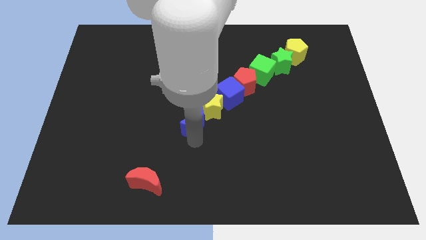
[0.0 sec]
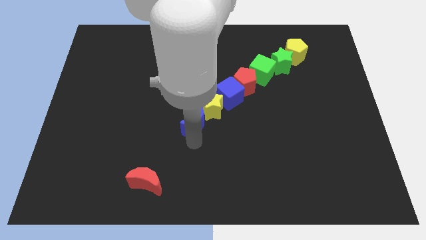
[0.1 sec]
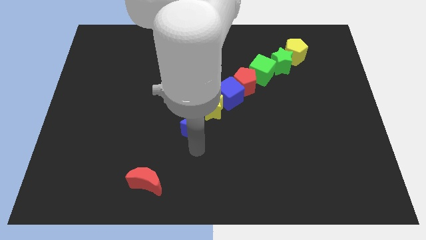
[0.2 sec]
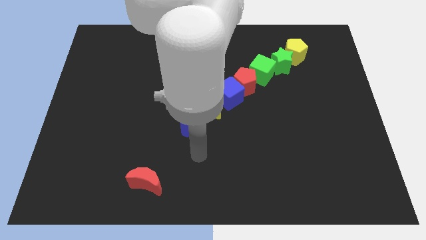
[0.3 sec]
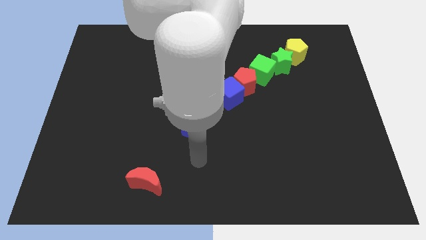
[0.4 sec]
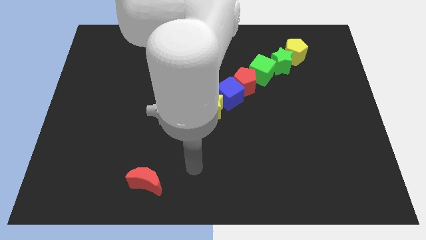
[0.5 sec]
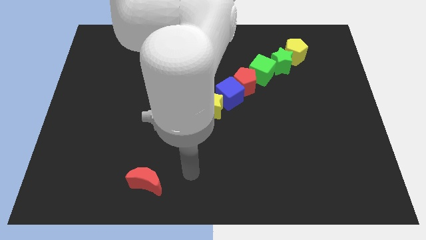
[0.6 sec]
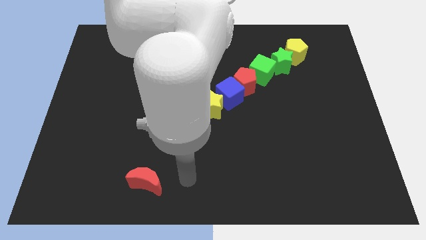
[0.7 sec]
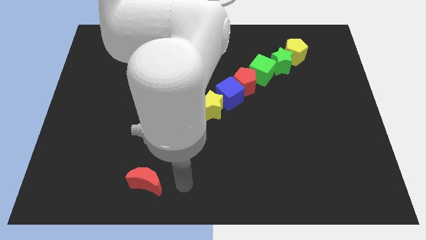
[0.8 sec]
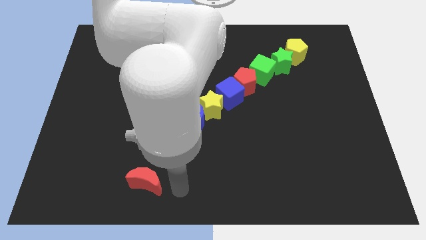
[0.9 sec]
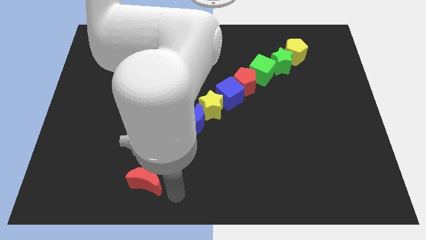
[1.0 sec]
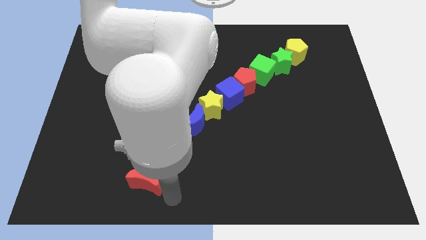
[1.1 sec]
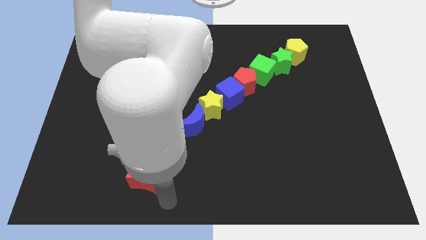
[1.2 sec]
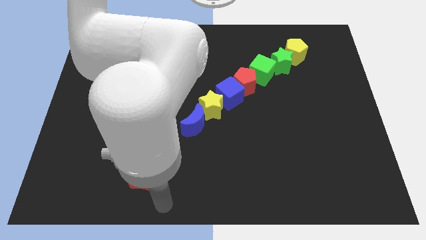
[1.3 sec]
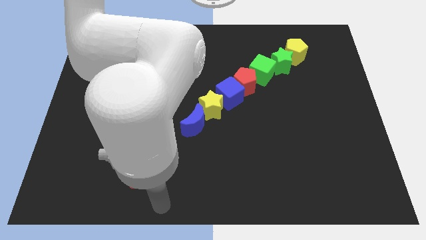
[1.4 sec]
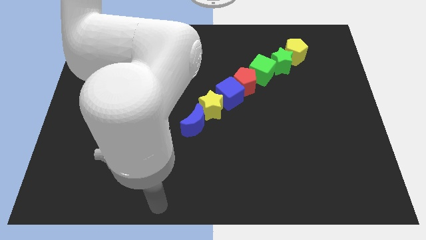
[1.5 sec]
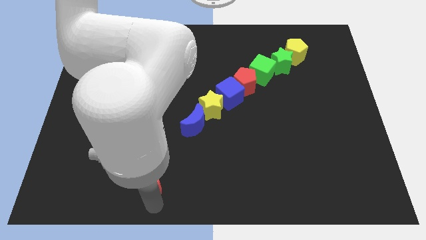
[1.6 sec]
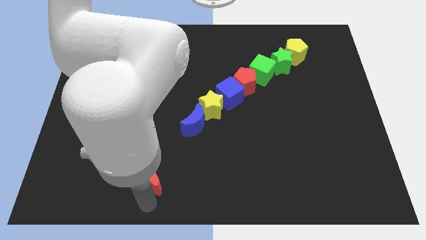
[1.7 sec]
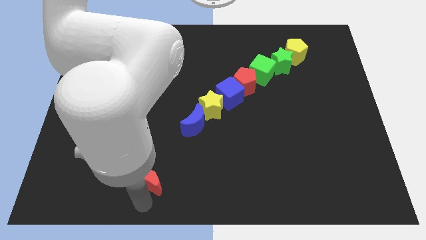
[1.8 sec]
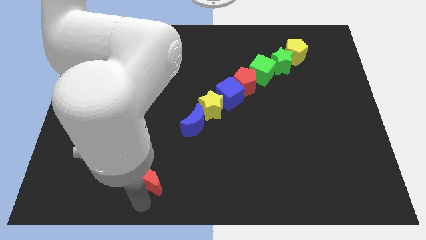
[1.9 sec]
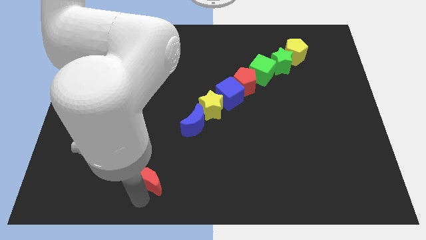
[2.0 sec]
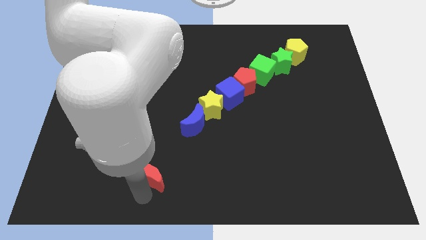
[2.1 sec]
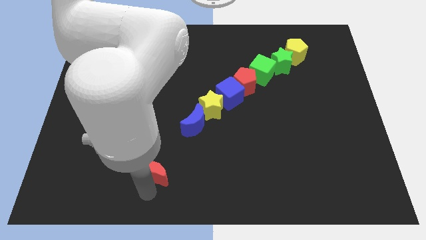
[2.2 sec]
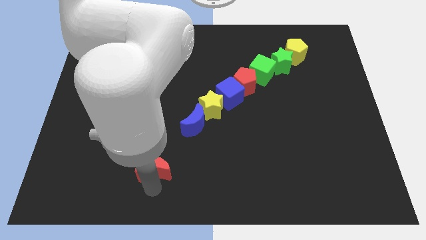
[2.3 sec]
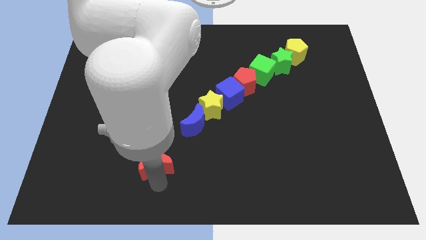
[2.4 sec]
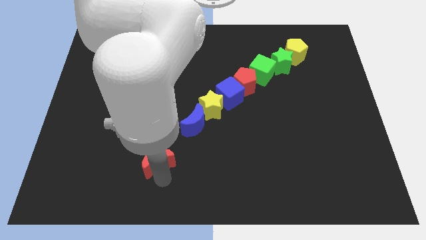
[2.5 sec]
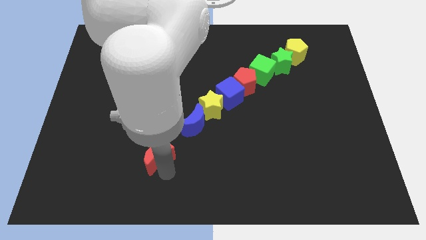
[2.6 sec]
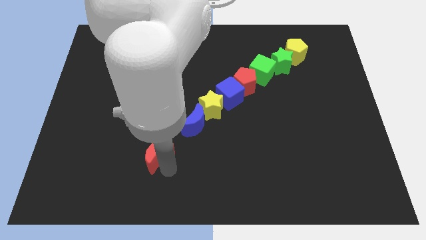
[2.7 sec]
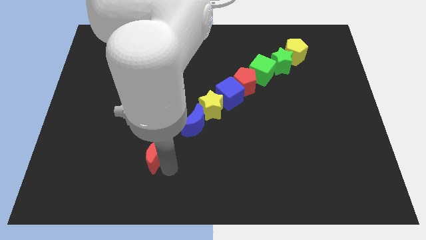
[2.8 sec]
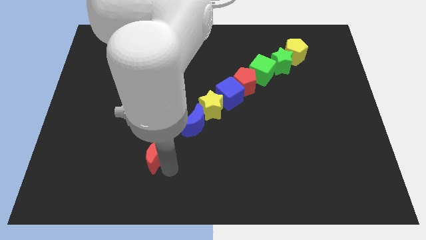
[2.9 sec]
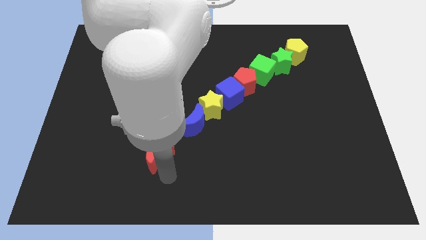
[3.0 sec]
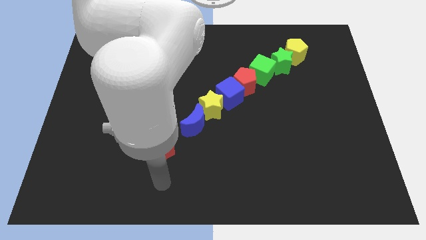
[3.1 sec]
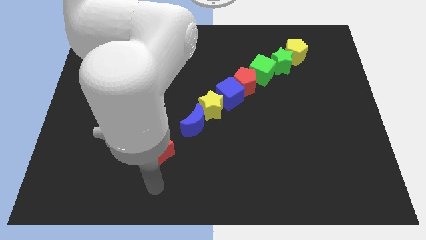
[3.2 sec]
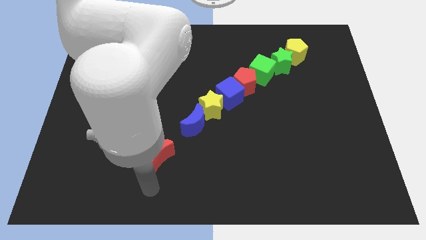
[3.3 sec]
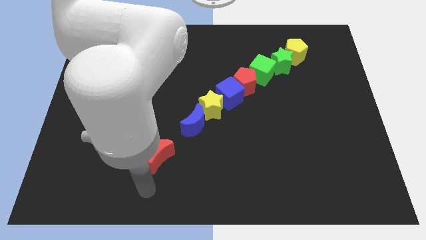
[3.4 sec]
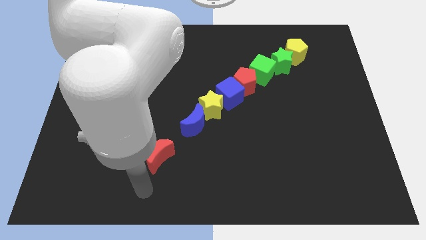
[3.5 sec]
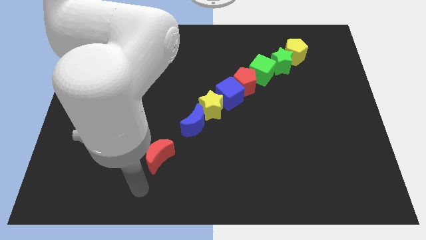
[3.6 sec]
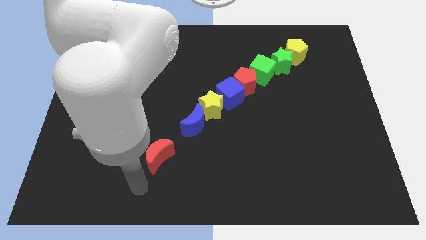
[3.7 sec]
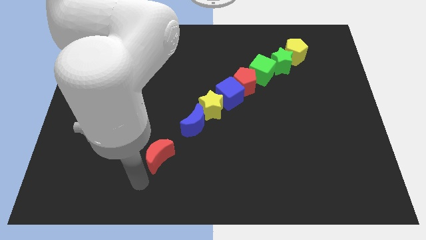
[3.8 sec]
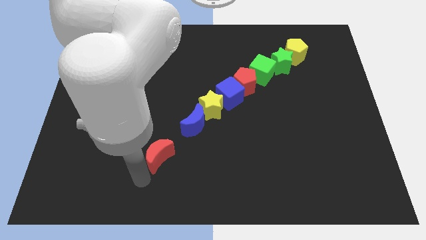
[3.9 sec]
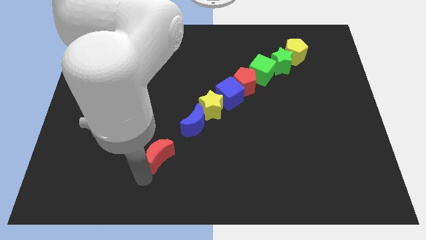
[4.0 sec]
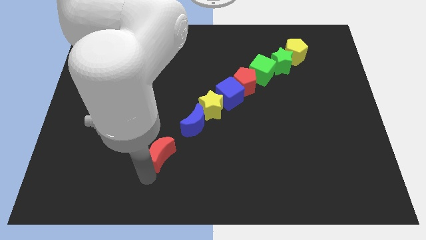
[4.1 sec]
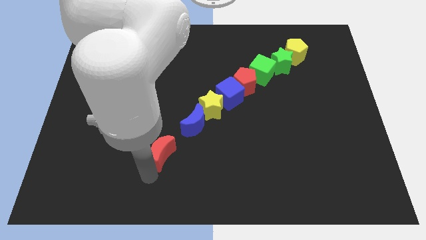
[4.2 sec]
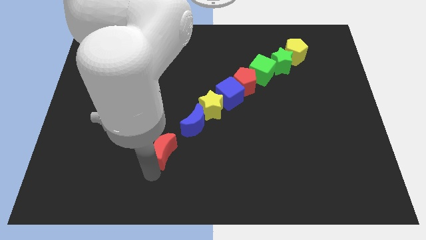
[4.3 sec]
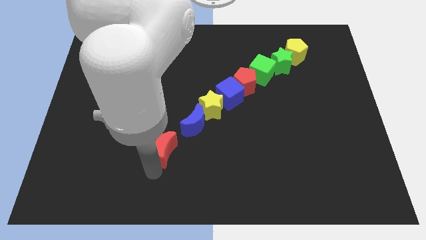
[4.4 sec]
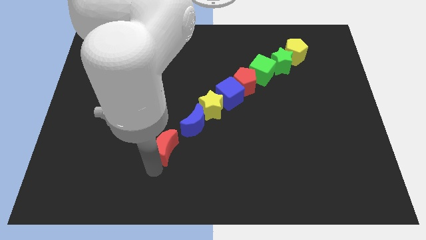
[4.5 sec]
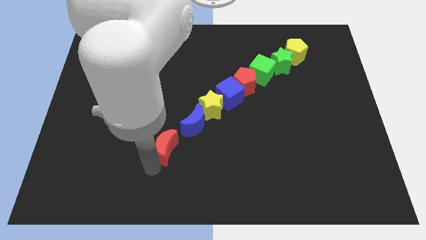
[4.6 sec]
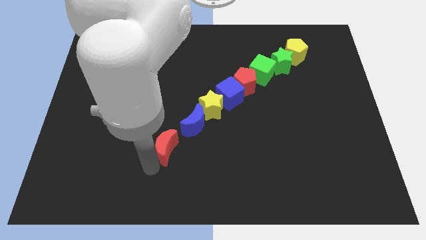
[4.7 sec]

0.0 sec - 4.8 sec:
push the red moon closer to the blue moon

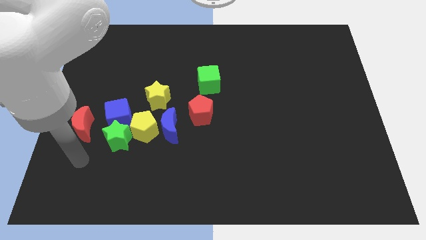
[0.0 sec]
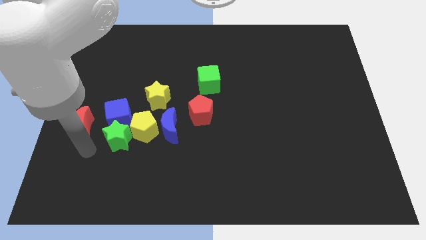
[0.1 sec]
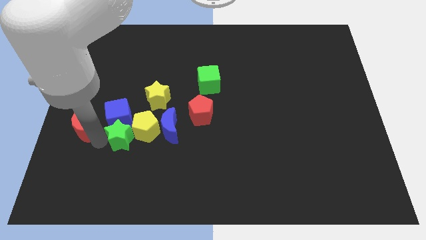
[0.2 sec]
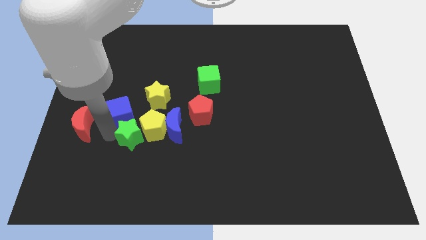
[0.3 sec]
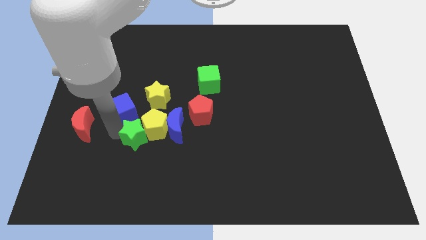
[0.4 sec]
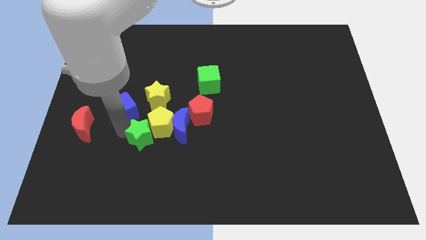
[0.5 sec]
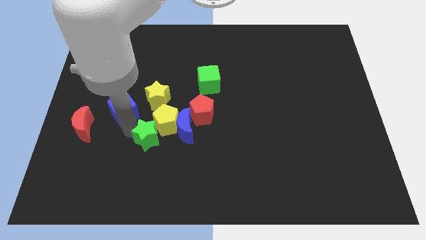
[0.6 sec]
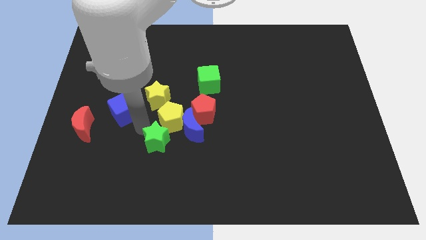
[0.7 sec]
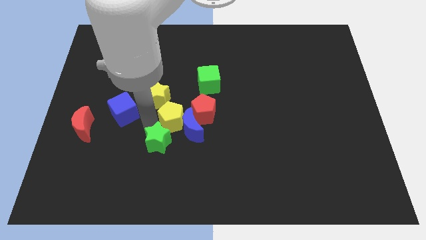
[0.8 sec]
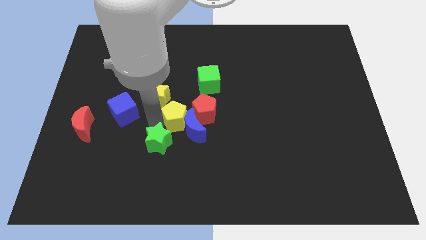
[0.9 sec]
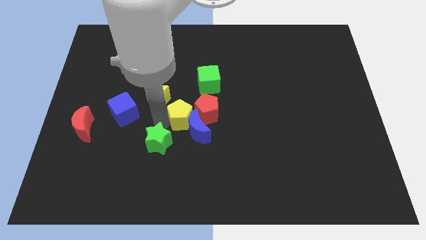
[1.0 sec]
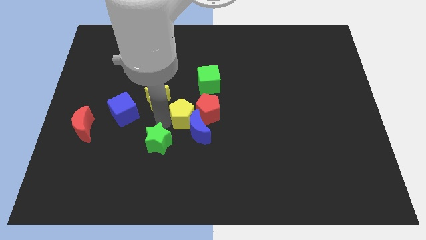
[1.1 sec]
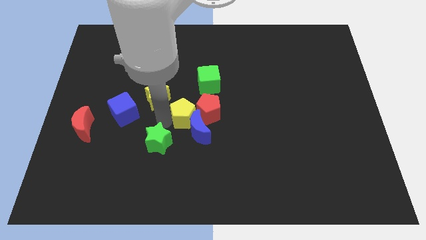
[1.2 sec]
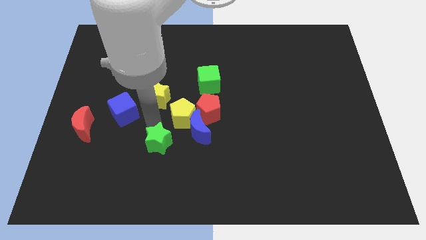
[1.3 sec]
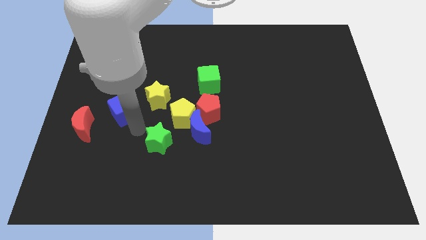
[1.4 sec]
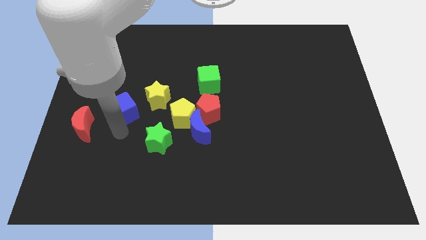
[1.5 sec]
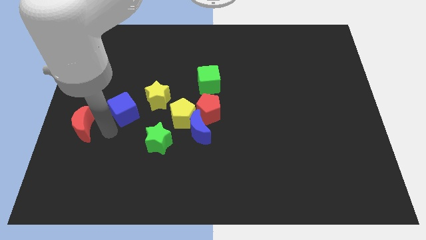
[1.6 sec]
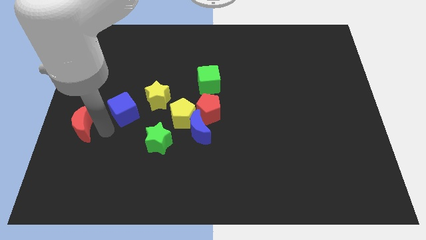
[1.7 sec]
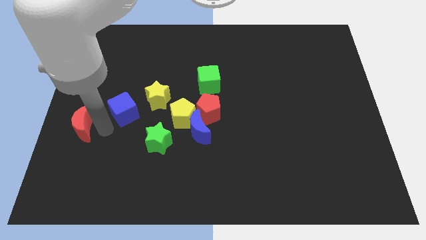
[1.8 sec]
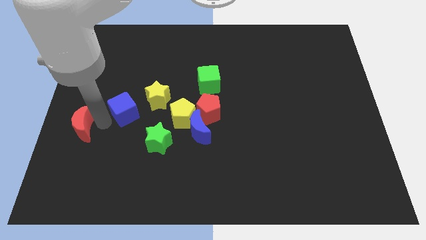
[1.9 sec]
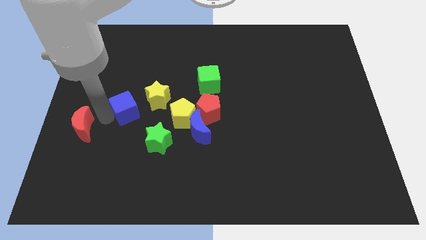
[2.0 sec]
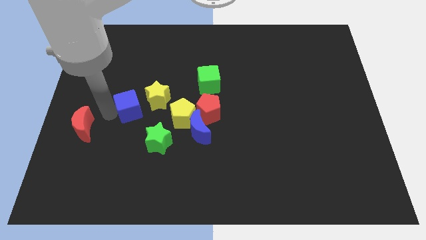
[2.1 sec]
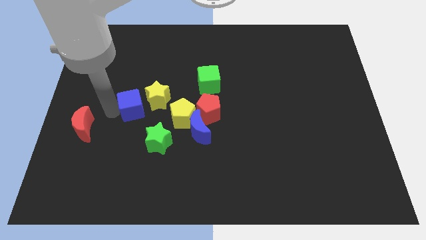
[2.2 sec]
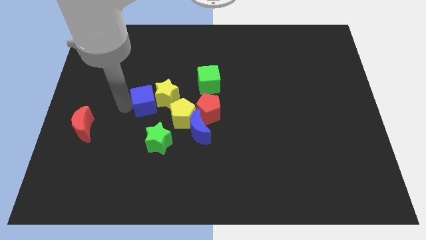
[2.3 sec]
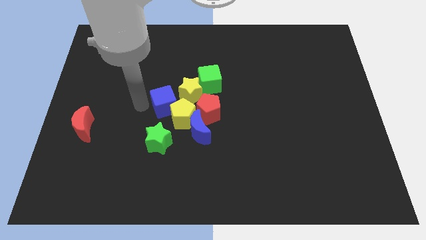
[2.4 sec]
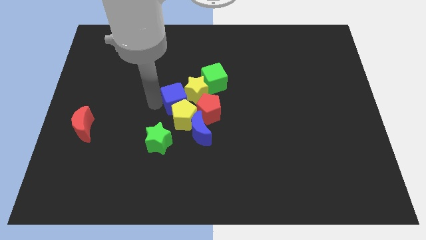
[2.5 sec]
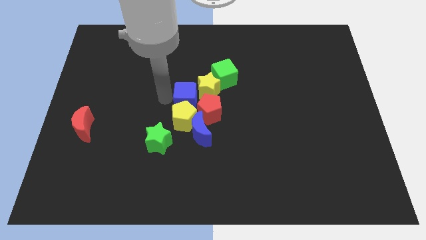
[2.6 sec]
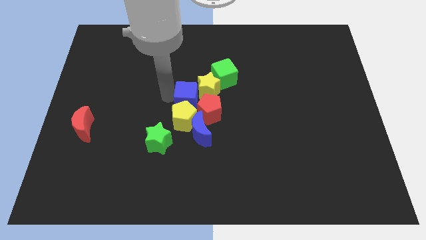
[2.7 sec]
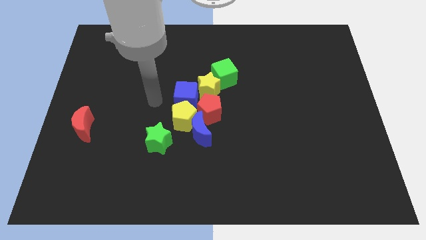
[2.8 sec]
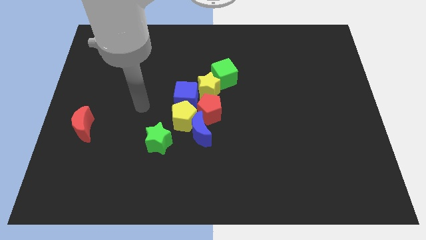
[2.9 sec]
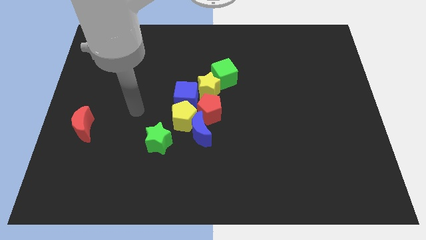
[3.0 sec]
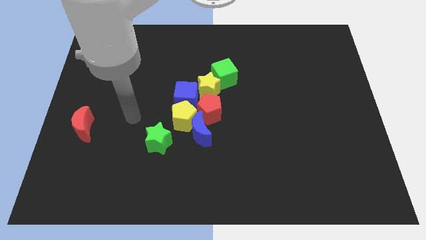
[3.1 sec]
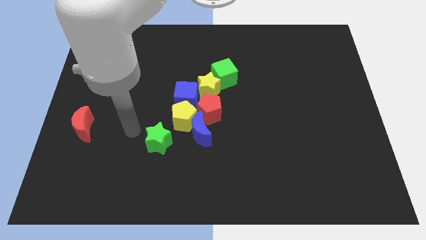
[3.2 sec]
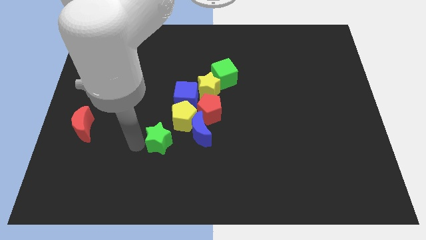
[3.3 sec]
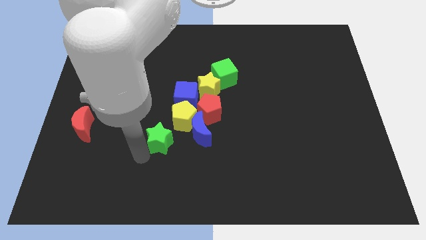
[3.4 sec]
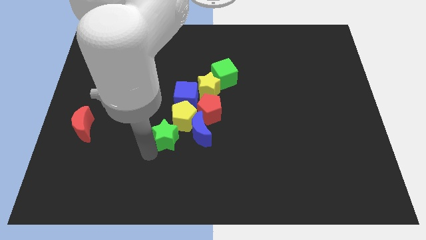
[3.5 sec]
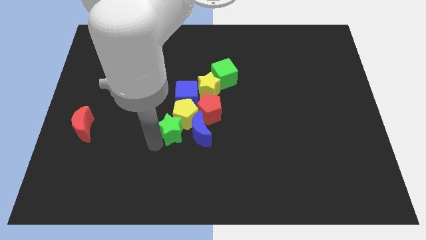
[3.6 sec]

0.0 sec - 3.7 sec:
push the group of blocks towards the center of the board

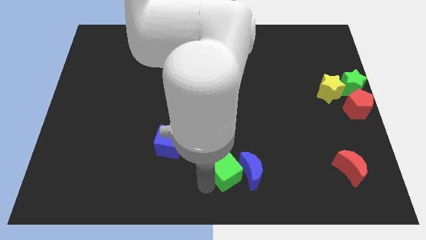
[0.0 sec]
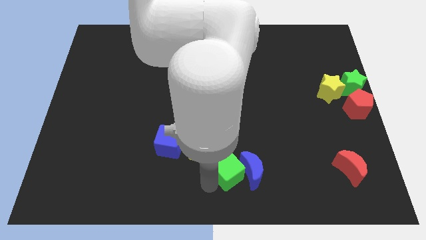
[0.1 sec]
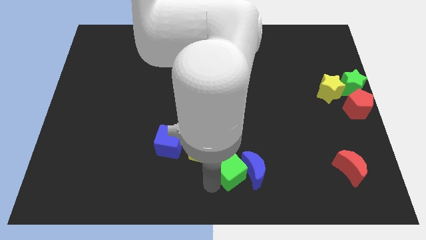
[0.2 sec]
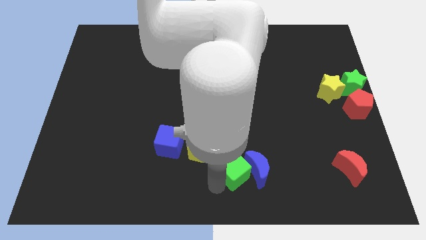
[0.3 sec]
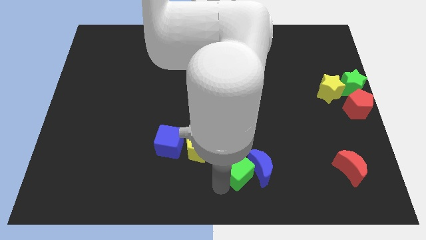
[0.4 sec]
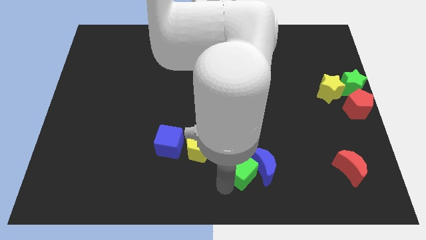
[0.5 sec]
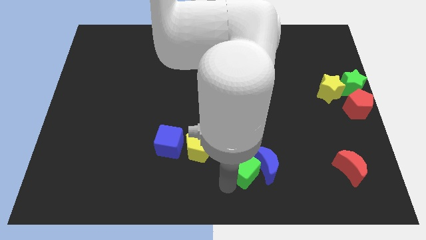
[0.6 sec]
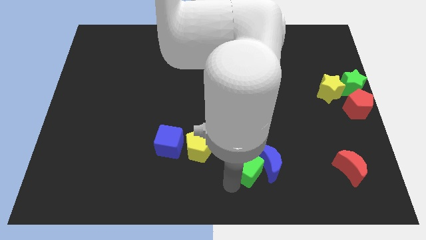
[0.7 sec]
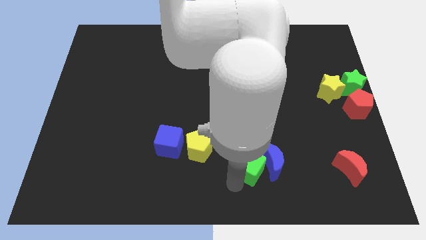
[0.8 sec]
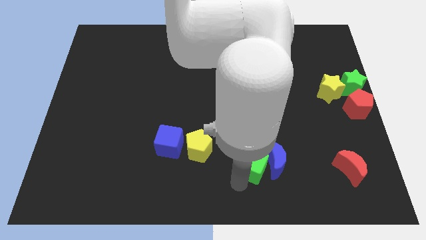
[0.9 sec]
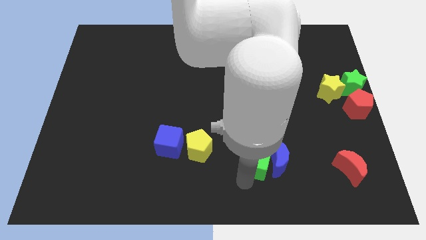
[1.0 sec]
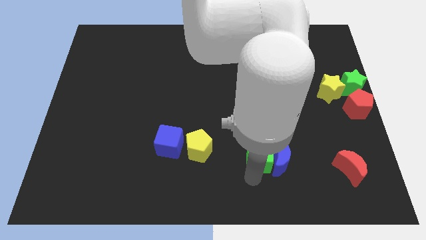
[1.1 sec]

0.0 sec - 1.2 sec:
move green cube and blue moon slightly right
